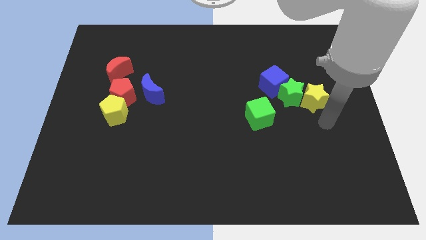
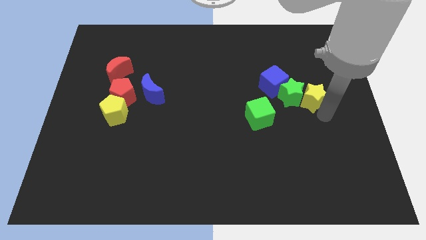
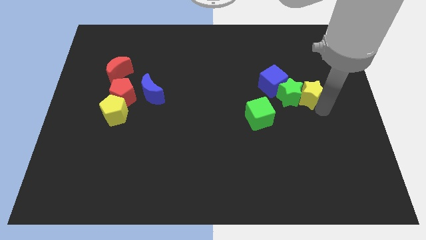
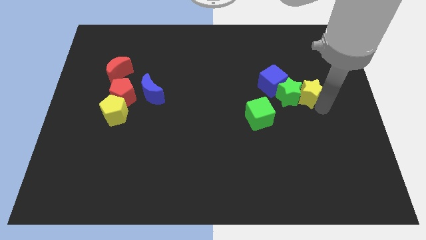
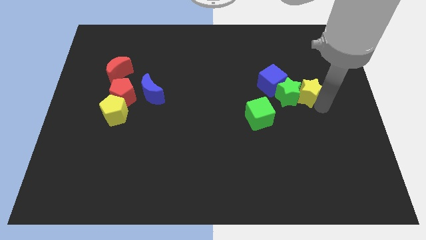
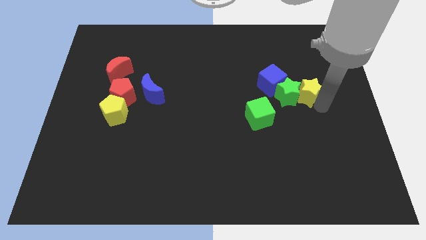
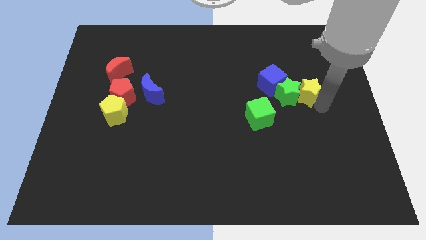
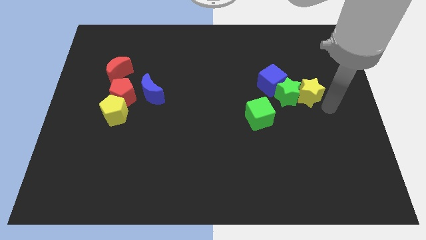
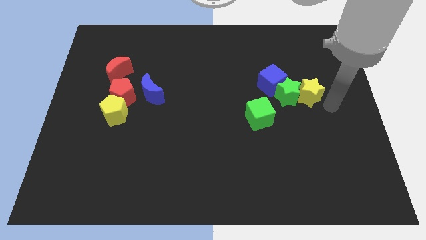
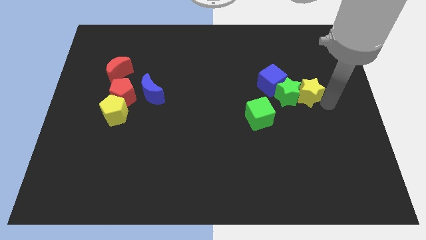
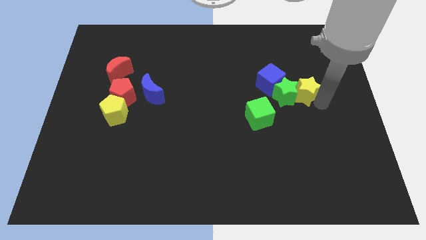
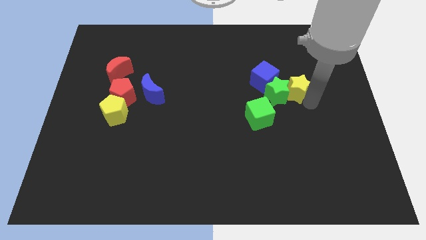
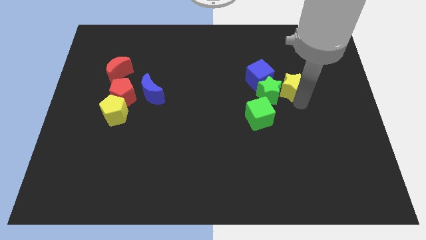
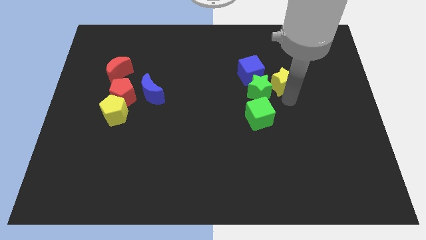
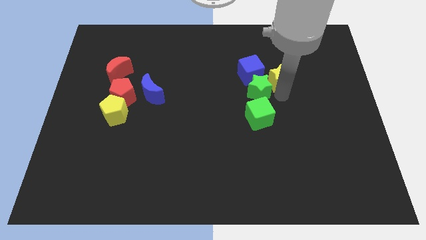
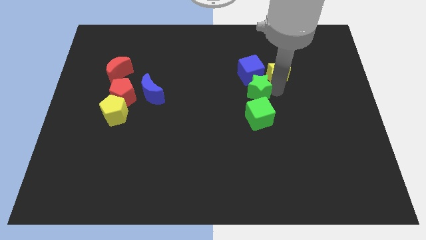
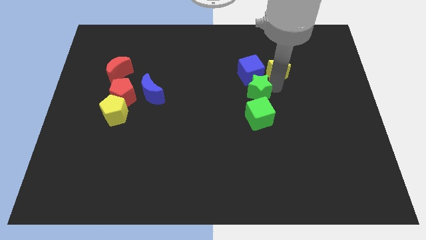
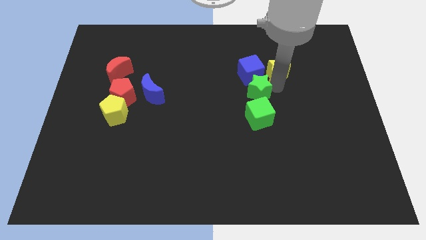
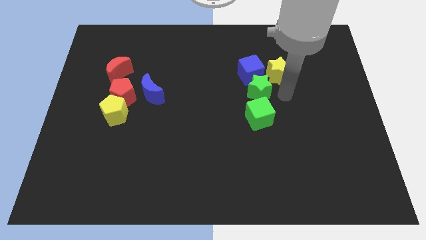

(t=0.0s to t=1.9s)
push the yellow star to the right of the blue cube

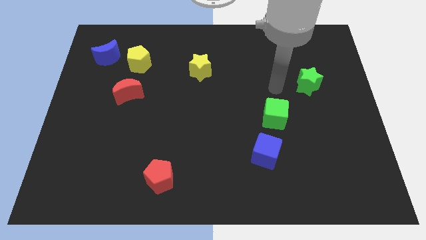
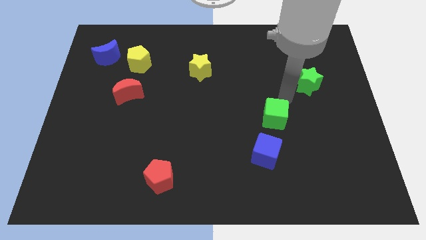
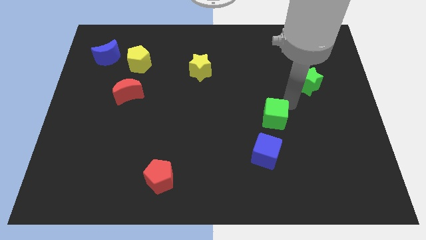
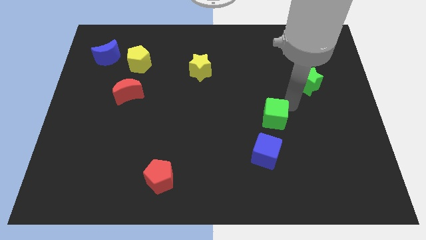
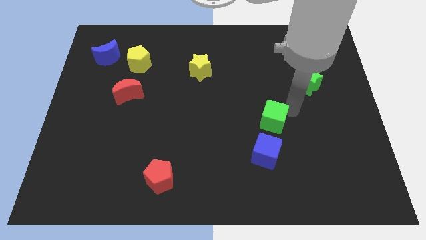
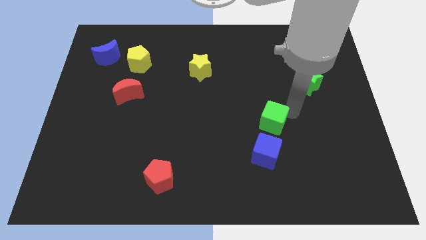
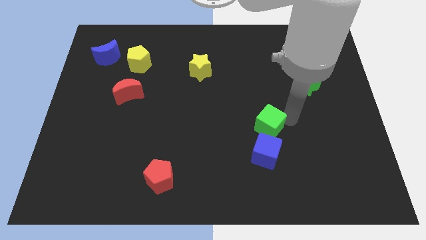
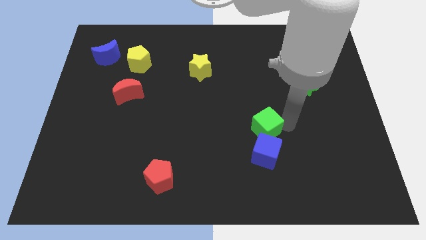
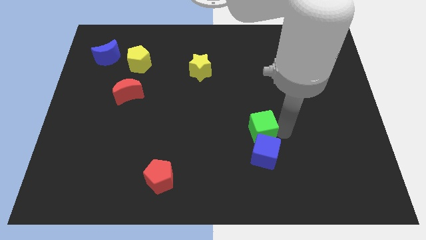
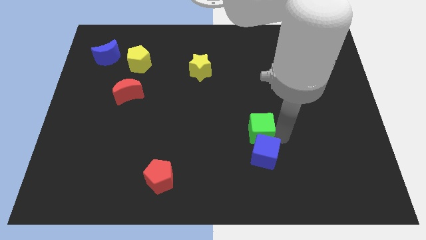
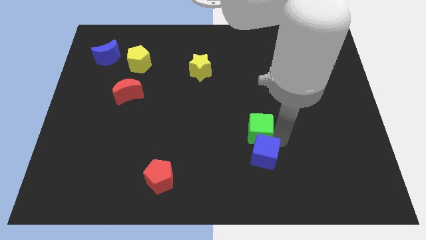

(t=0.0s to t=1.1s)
move the green cube into the blue cube

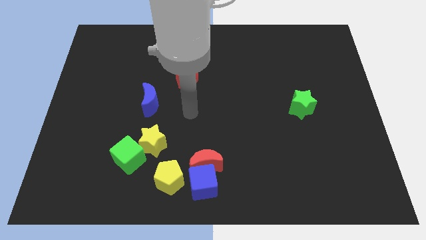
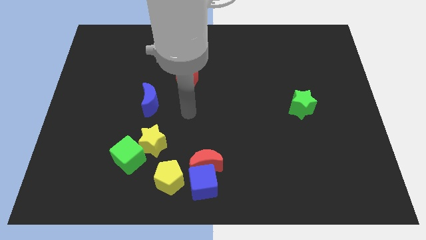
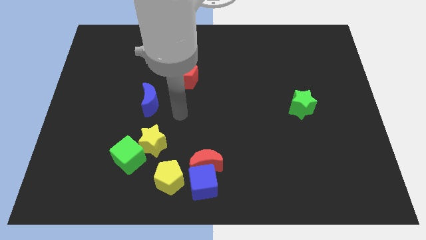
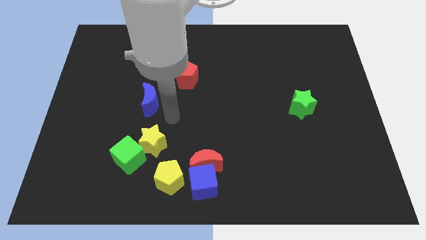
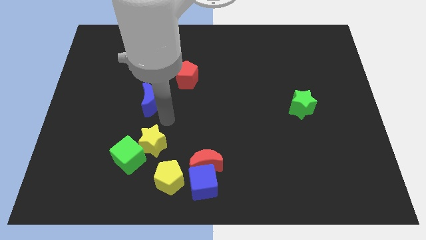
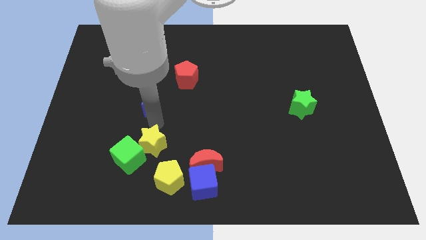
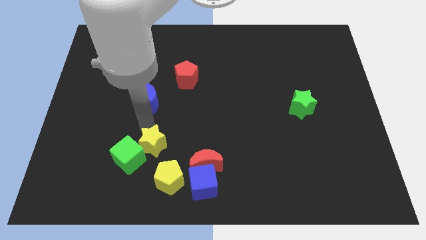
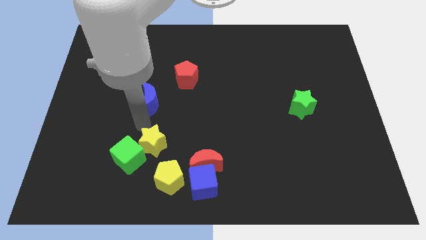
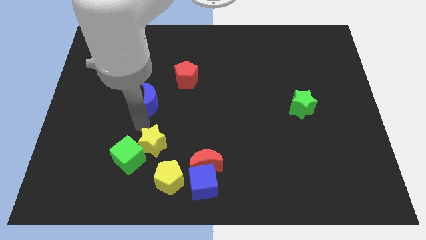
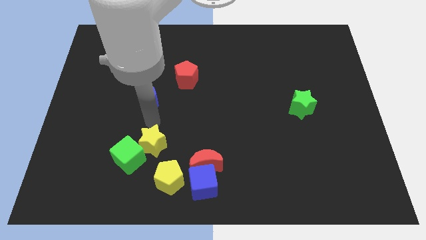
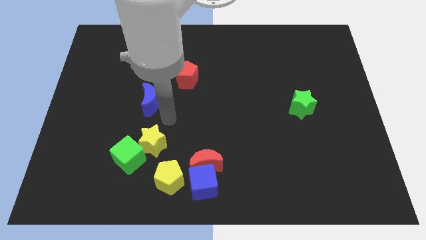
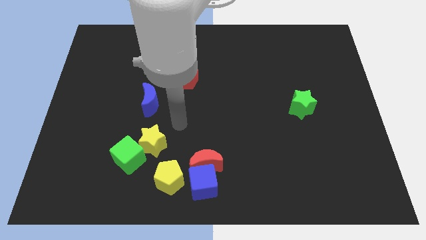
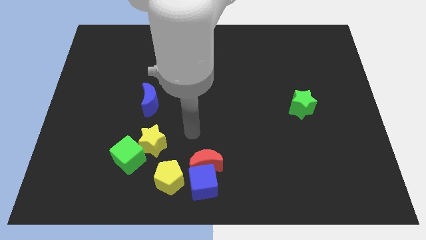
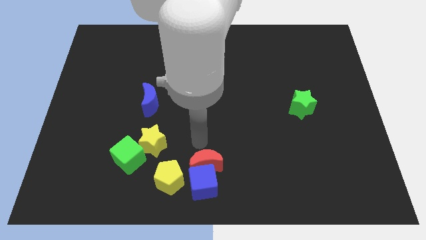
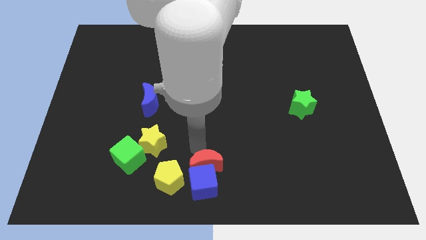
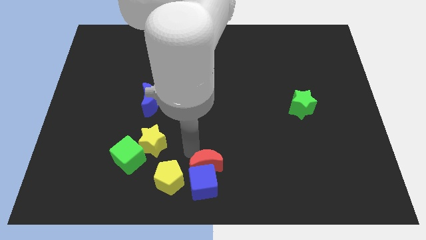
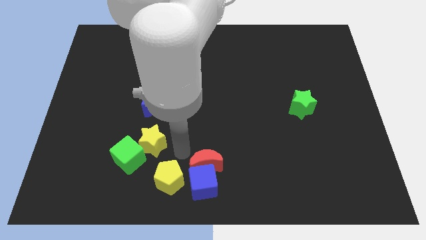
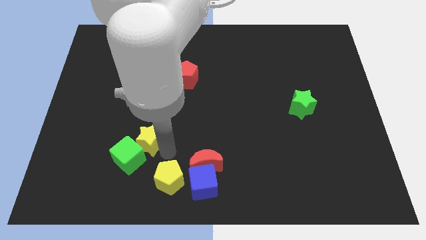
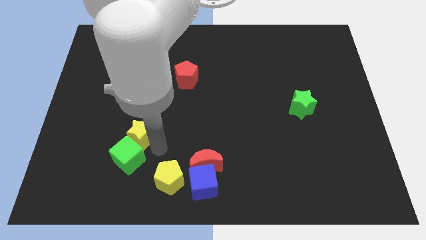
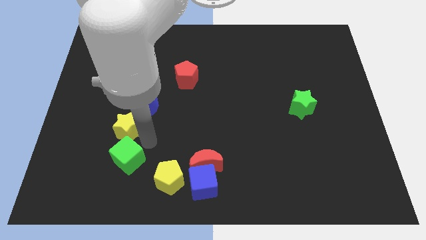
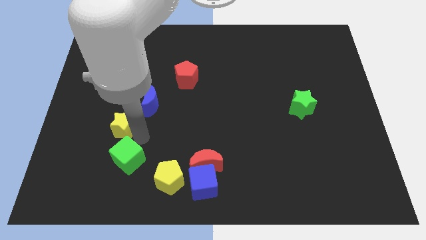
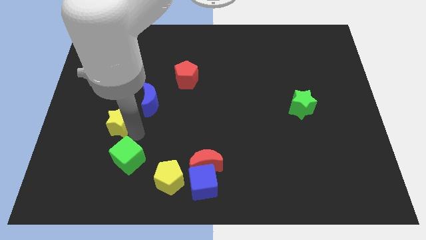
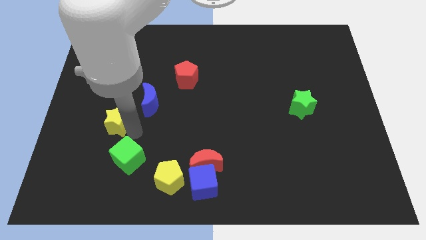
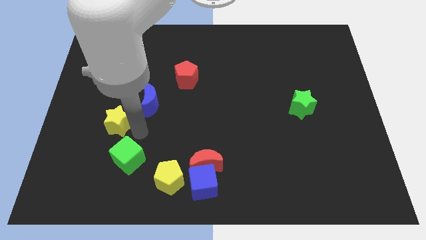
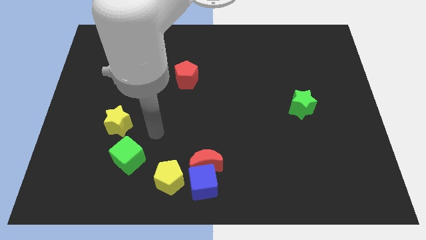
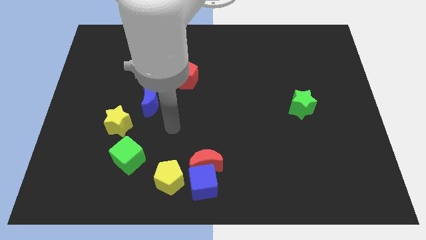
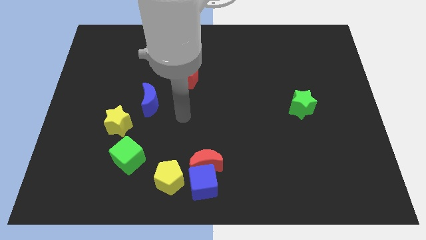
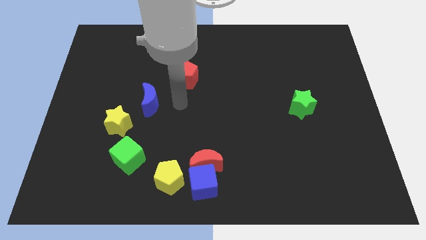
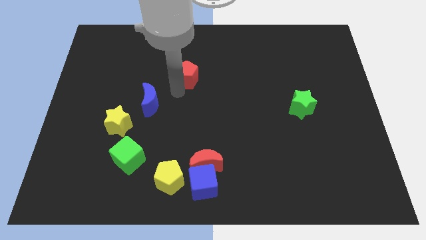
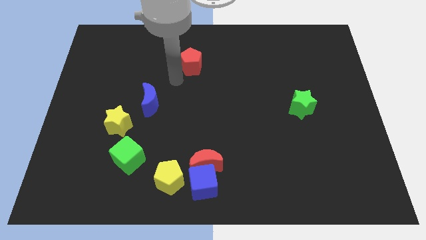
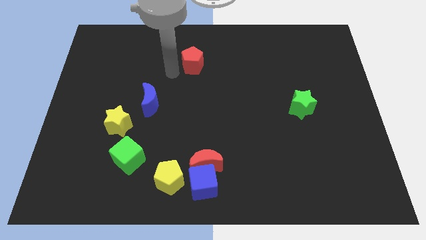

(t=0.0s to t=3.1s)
slide the yellow star diagonally bottom left to the blue moon

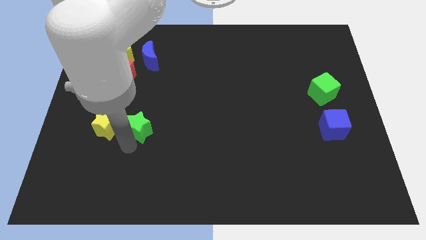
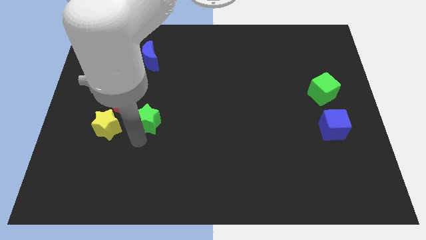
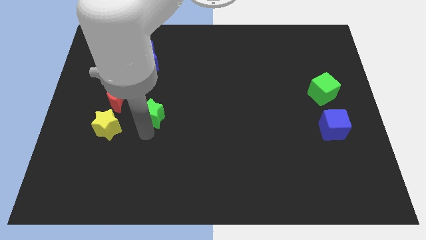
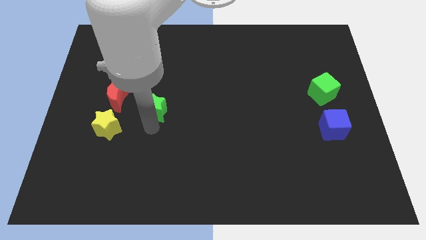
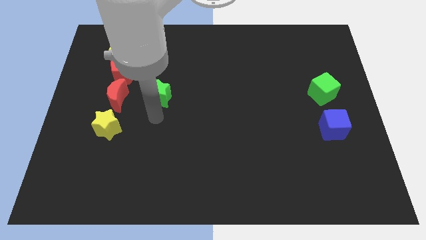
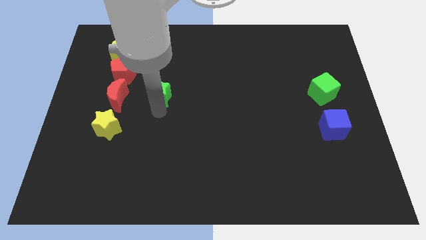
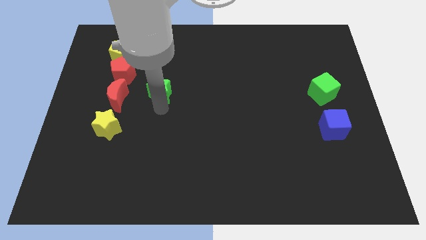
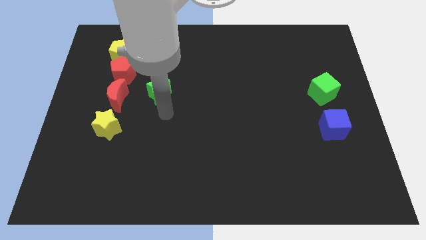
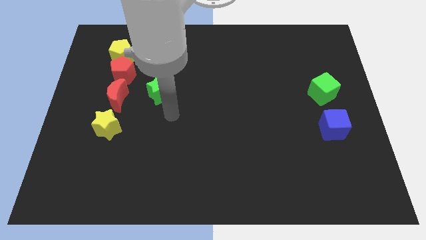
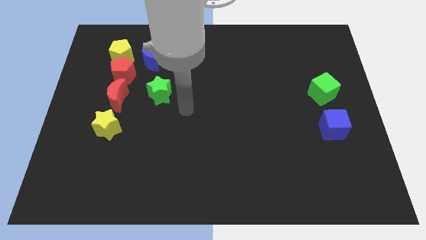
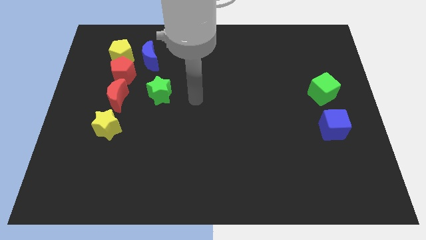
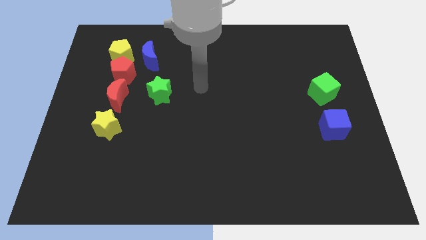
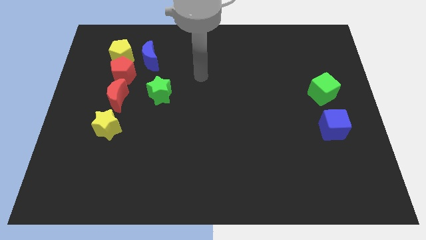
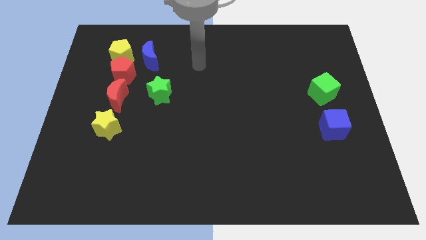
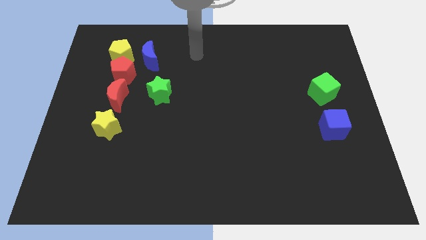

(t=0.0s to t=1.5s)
place green star to the right side of the red moon

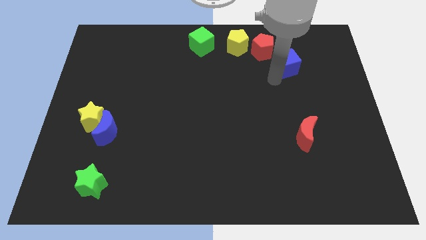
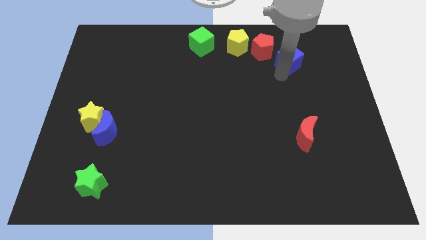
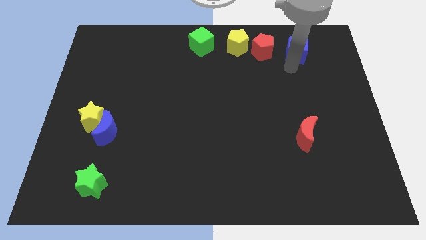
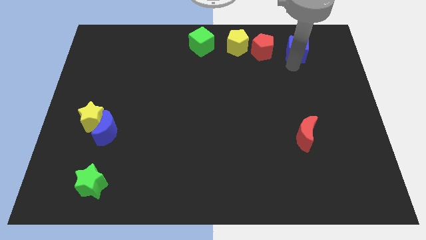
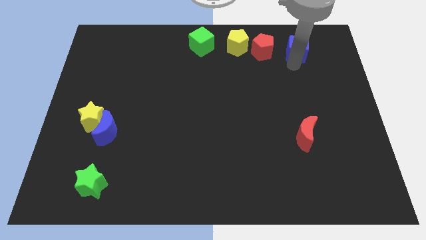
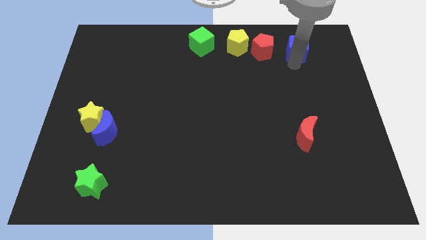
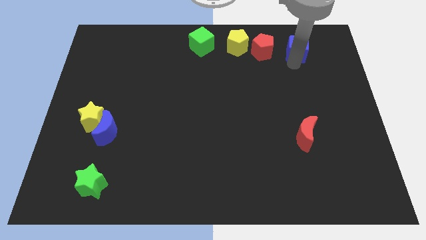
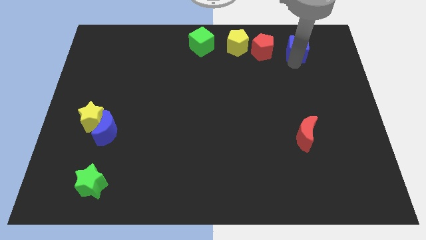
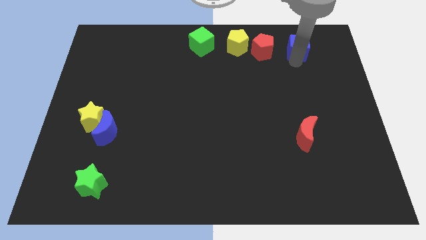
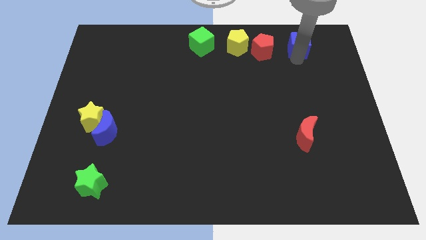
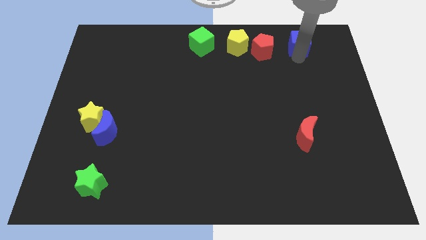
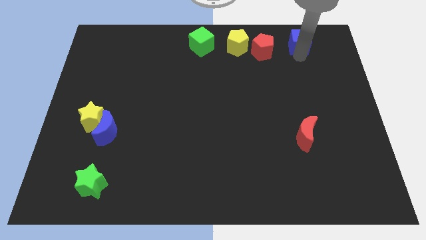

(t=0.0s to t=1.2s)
push the blue cube to the right of the red pentagon

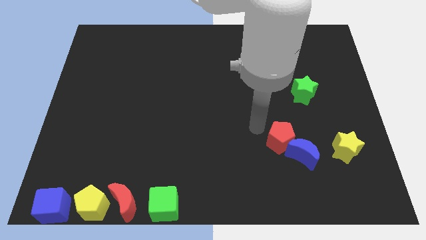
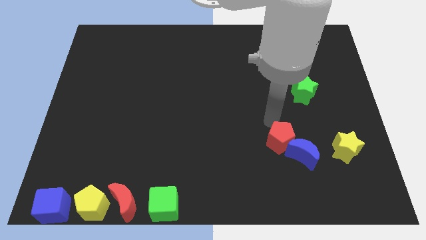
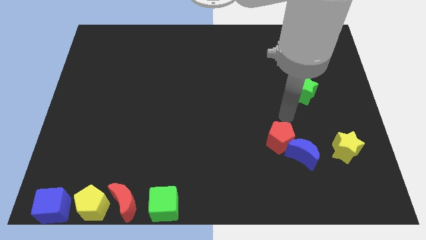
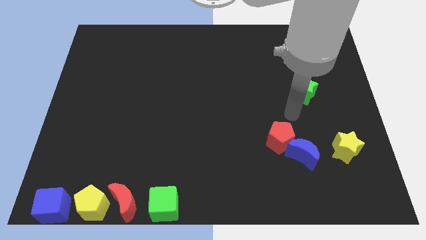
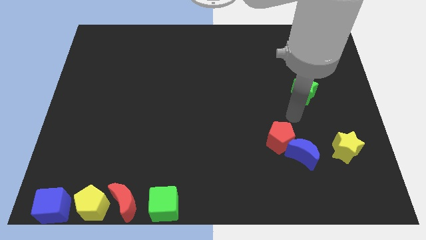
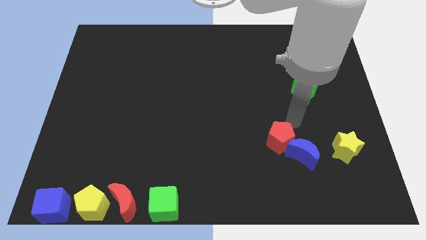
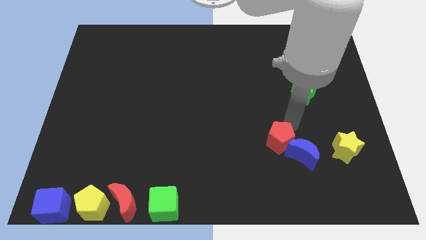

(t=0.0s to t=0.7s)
place the arm above the red pentagon
